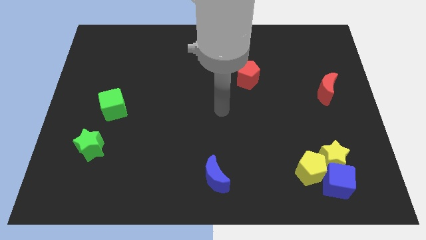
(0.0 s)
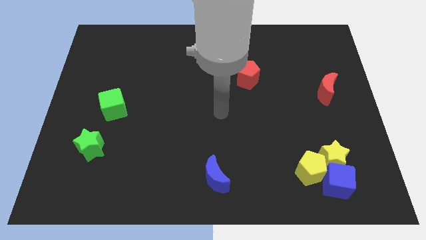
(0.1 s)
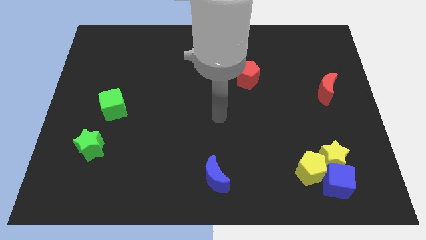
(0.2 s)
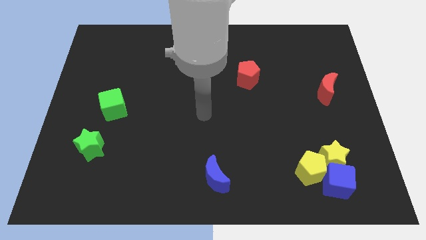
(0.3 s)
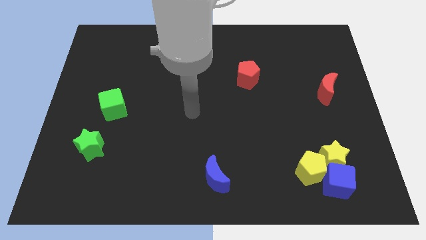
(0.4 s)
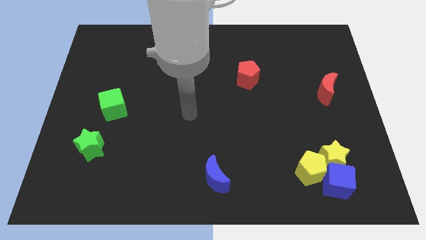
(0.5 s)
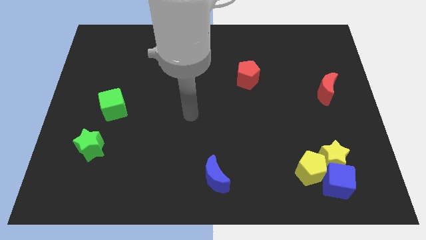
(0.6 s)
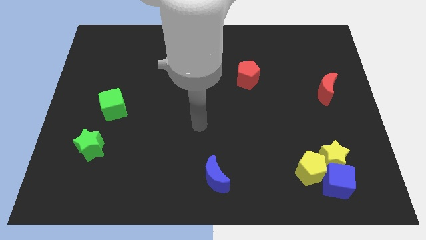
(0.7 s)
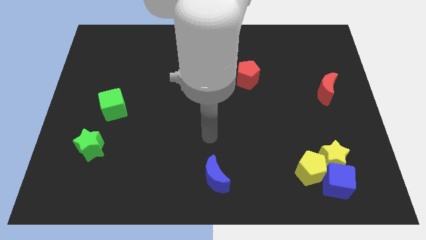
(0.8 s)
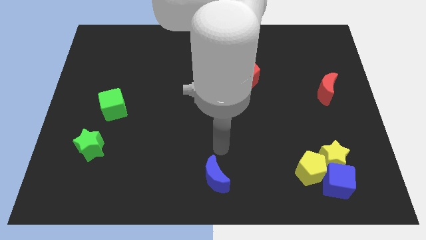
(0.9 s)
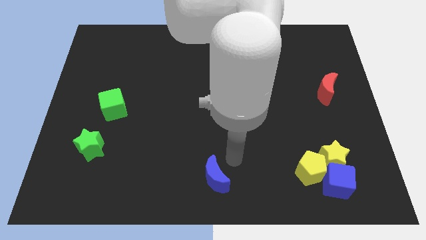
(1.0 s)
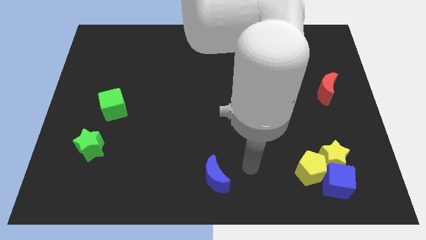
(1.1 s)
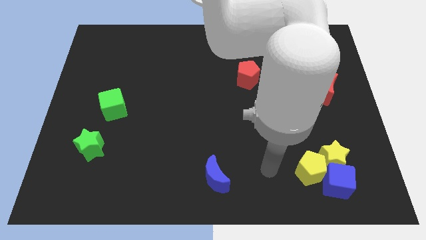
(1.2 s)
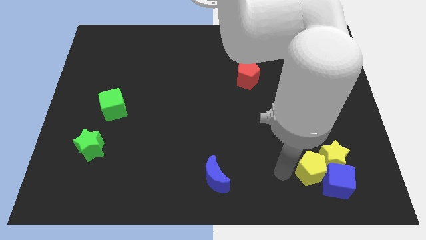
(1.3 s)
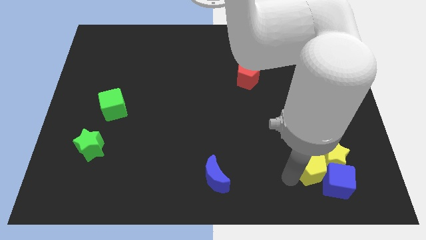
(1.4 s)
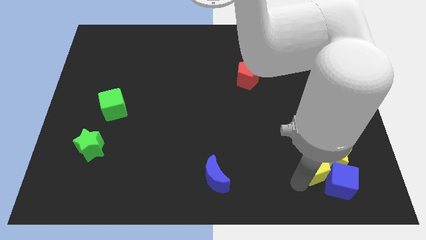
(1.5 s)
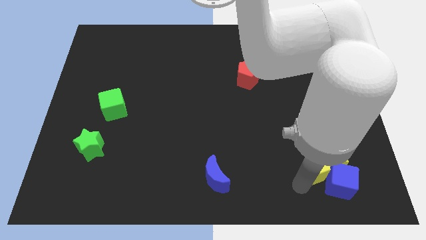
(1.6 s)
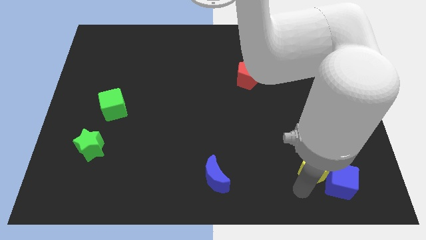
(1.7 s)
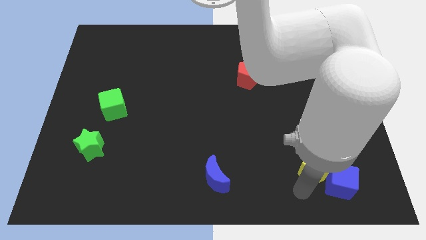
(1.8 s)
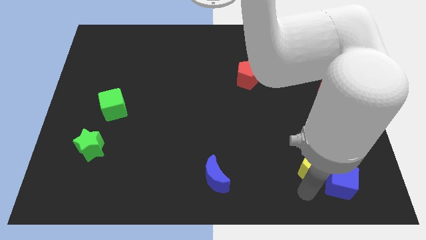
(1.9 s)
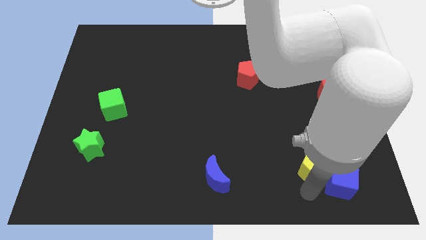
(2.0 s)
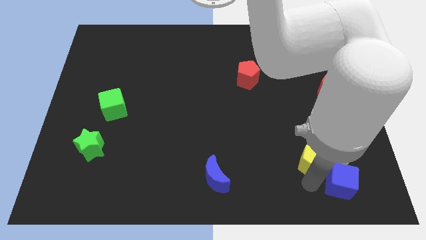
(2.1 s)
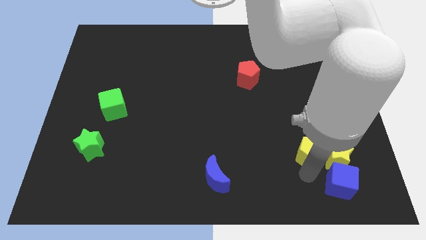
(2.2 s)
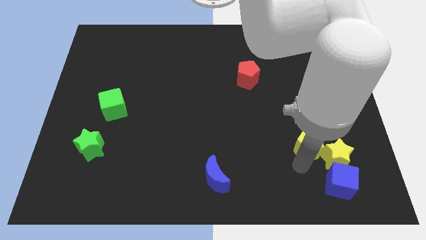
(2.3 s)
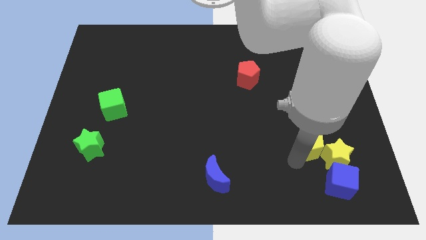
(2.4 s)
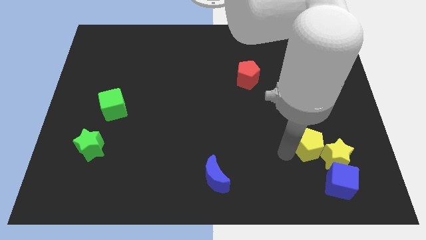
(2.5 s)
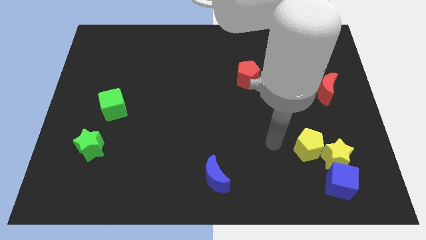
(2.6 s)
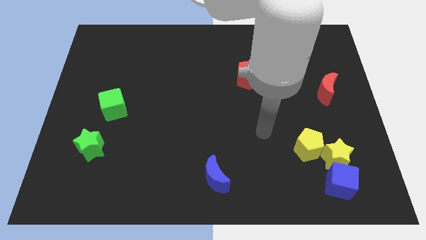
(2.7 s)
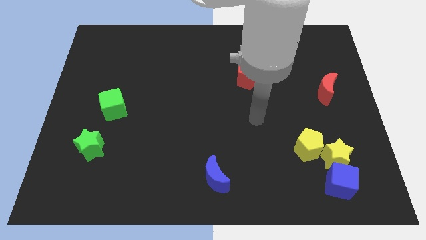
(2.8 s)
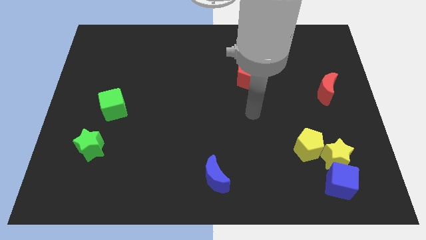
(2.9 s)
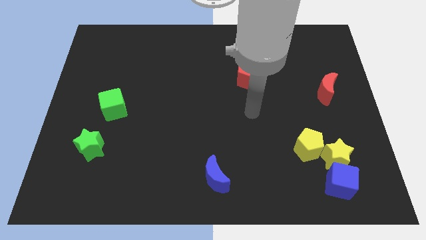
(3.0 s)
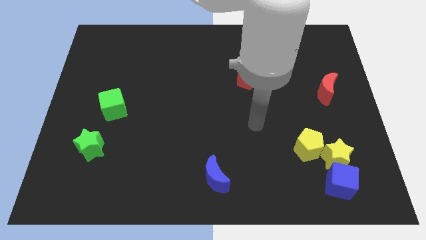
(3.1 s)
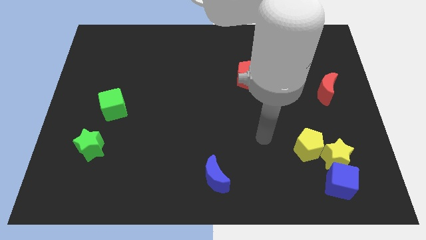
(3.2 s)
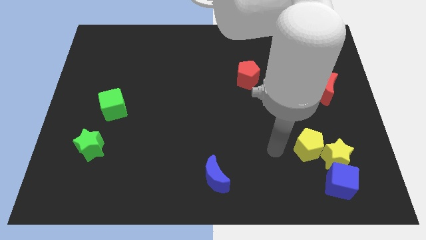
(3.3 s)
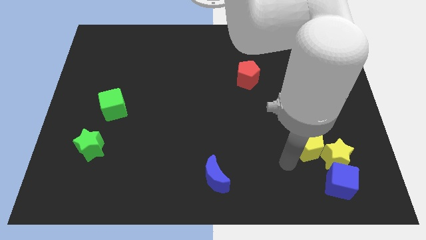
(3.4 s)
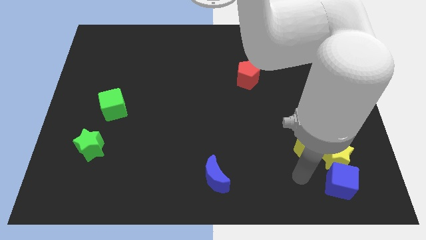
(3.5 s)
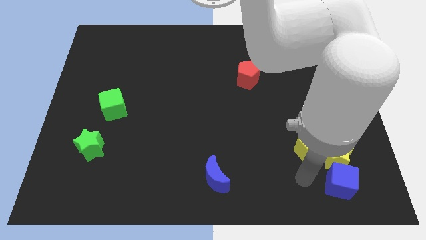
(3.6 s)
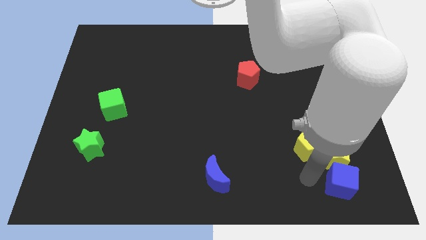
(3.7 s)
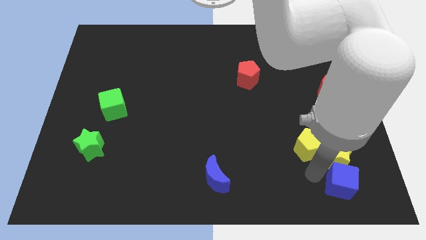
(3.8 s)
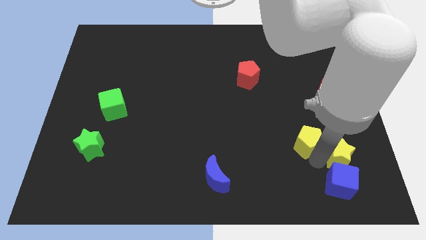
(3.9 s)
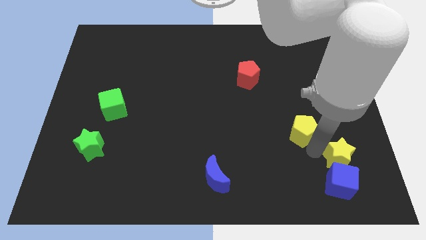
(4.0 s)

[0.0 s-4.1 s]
touch the yellow pentagon

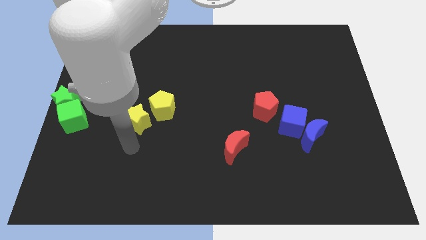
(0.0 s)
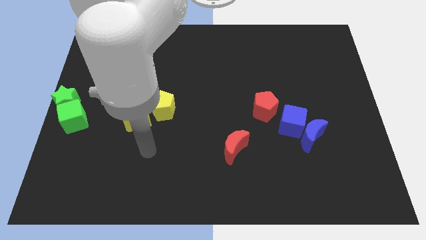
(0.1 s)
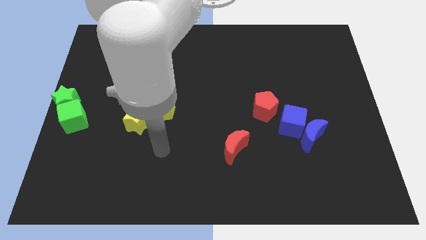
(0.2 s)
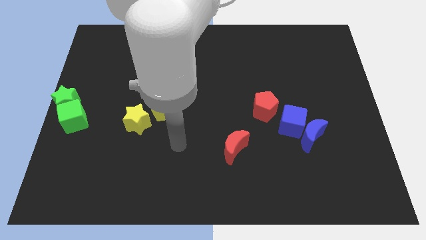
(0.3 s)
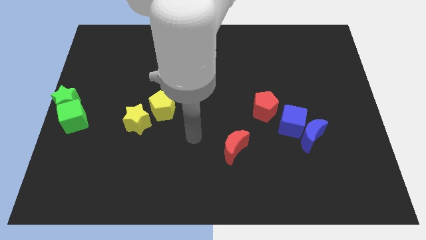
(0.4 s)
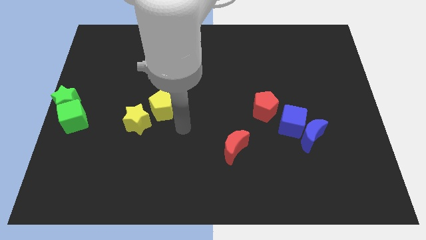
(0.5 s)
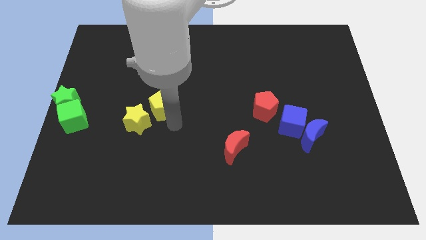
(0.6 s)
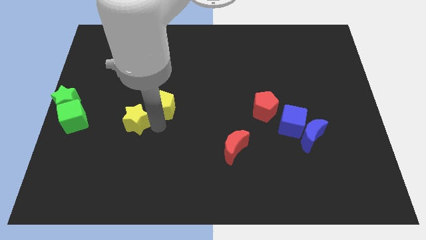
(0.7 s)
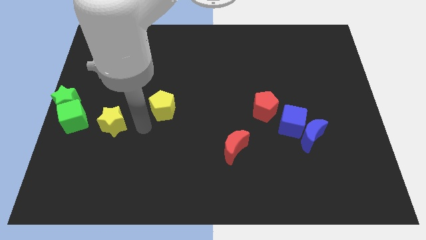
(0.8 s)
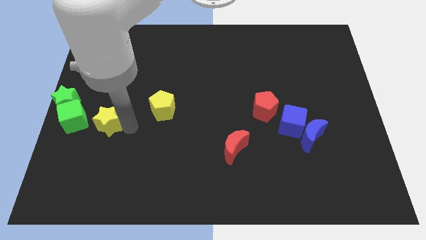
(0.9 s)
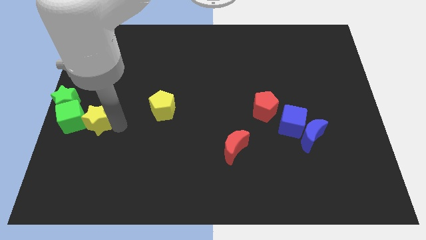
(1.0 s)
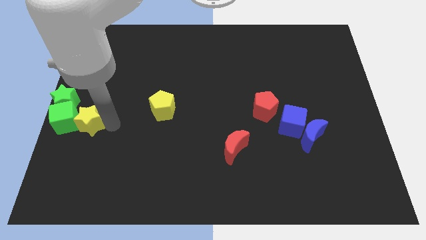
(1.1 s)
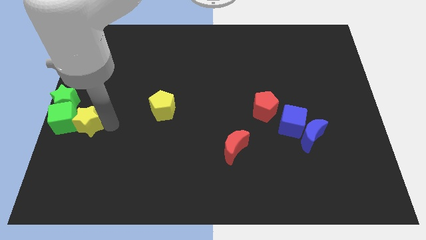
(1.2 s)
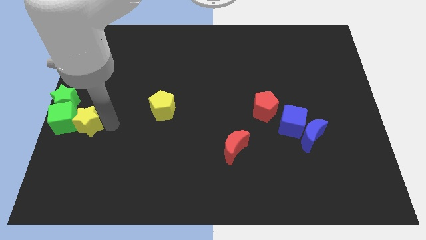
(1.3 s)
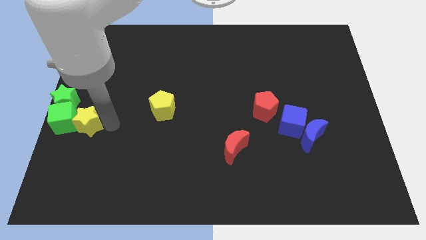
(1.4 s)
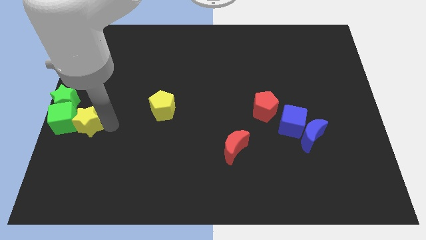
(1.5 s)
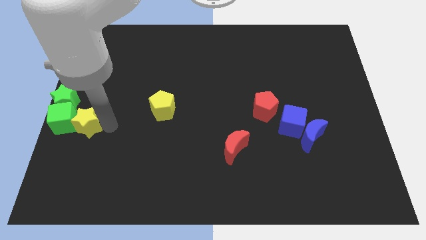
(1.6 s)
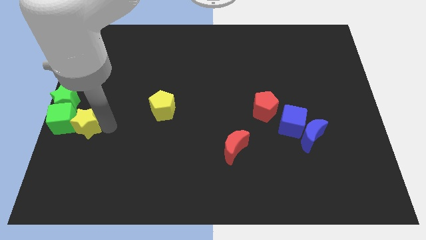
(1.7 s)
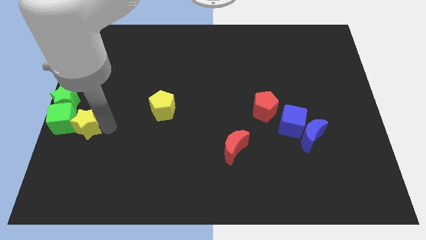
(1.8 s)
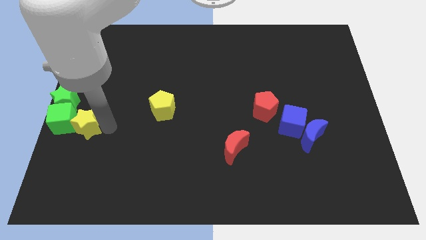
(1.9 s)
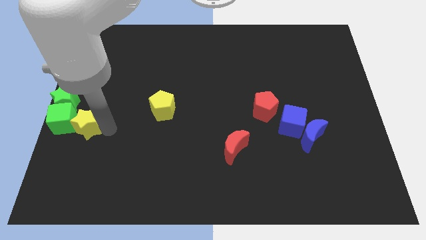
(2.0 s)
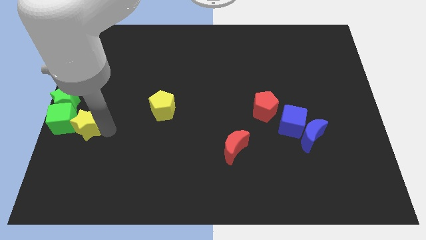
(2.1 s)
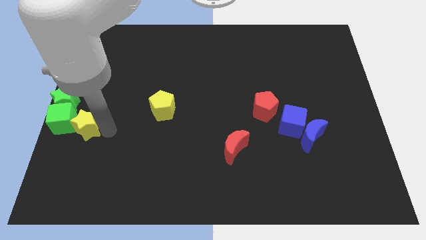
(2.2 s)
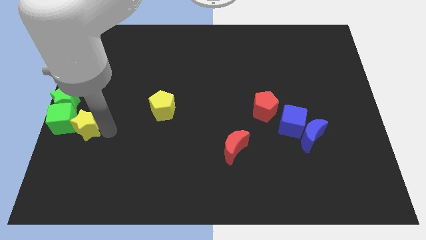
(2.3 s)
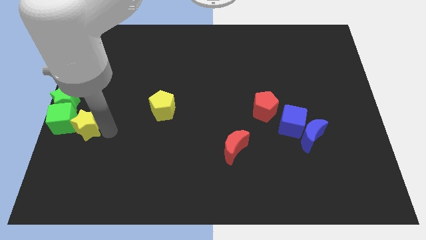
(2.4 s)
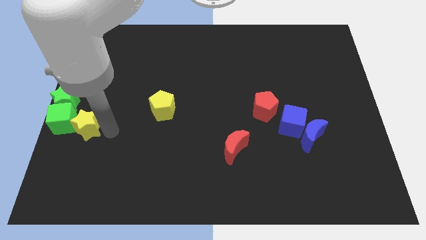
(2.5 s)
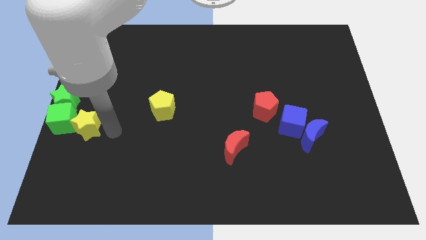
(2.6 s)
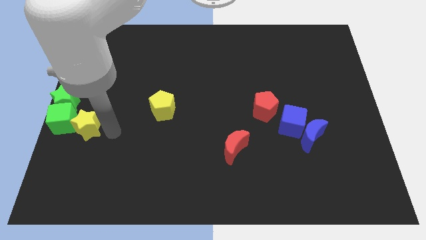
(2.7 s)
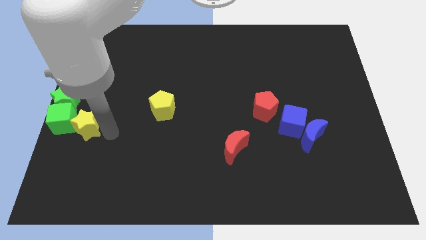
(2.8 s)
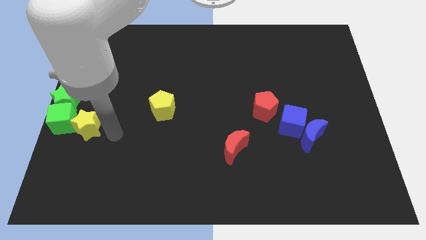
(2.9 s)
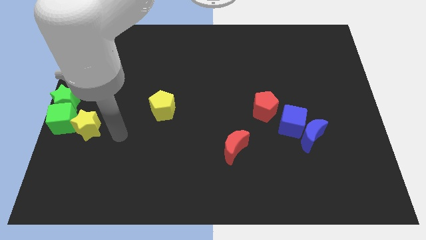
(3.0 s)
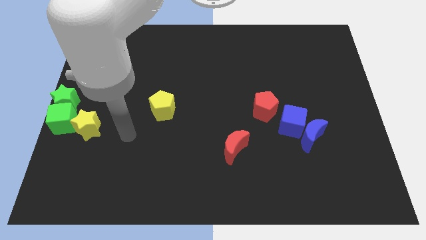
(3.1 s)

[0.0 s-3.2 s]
slide yellow star into green cube

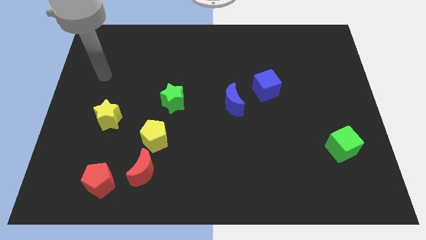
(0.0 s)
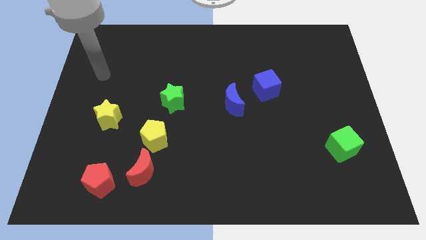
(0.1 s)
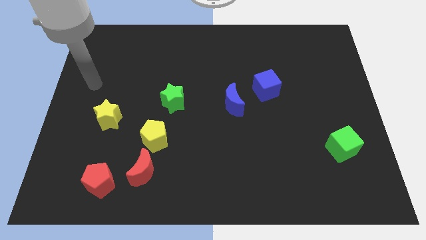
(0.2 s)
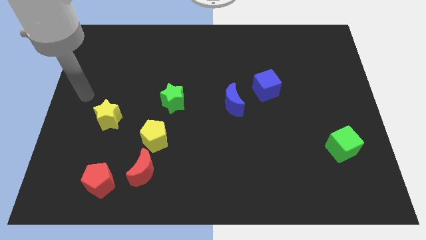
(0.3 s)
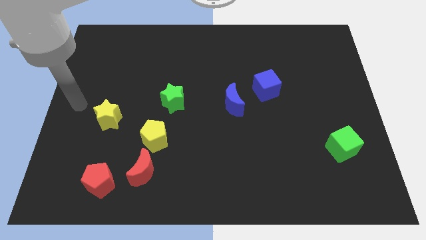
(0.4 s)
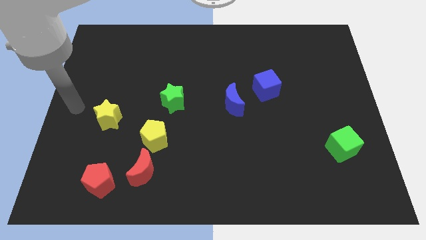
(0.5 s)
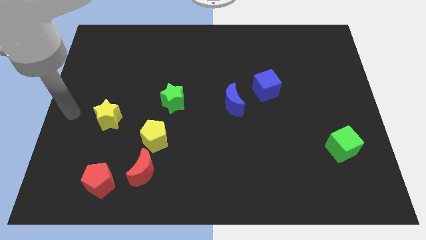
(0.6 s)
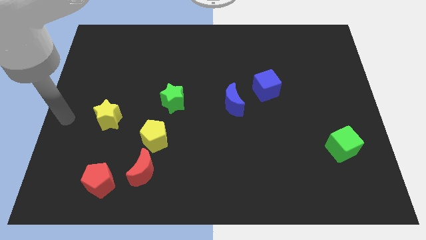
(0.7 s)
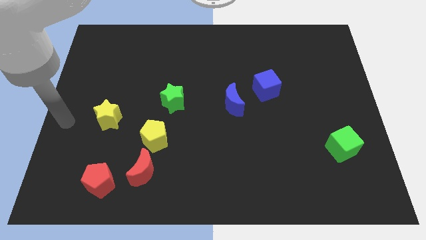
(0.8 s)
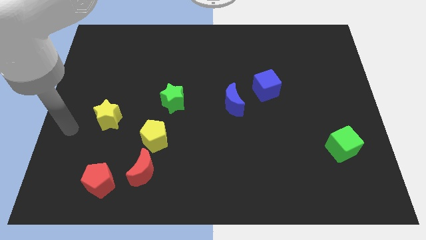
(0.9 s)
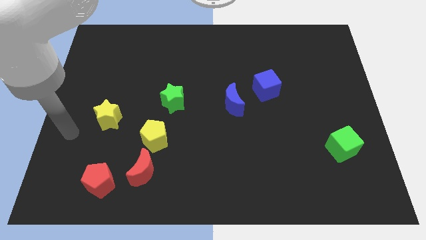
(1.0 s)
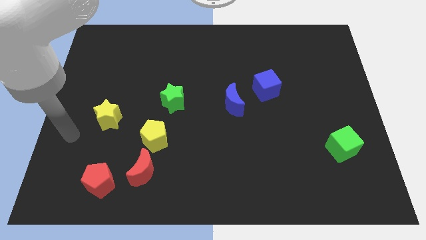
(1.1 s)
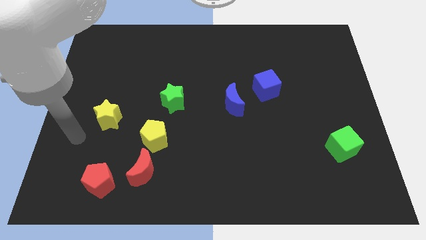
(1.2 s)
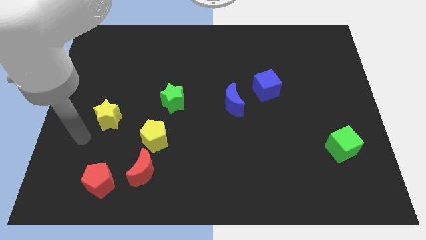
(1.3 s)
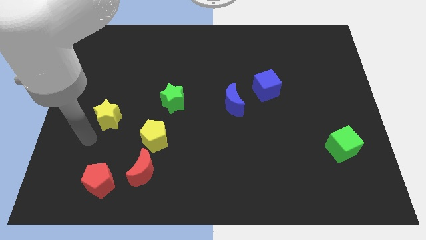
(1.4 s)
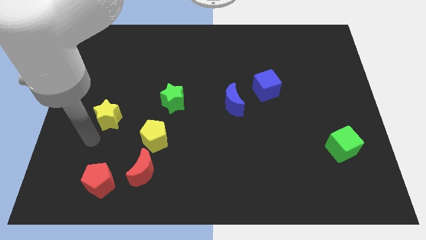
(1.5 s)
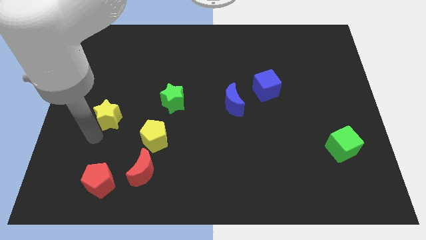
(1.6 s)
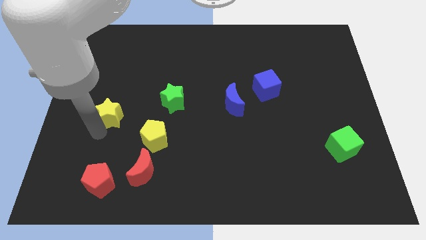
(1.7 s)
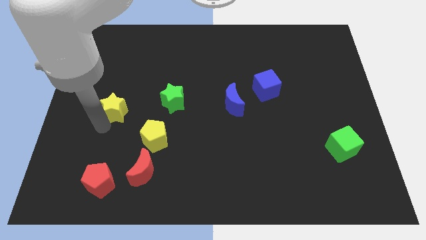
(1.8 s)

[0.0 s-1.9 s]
point your arm below yellow star
